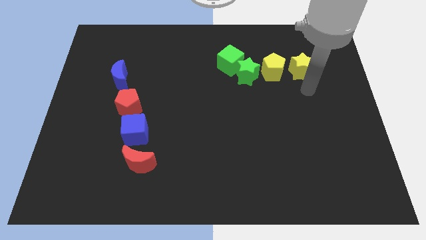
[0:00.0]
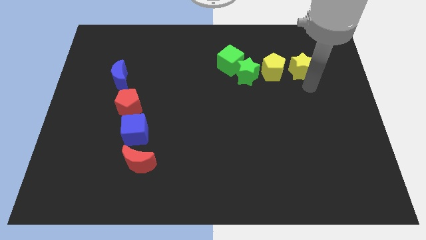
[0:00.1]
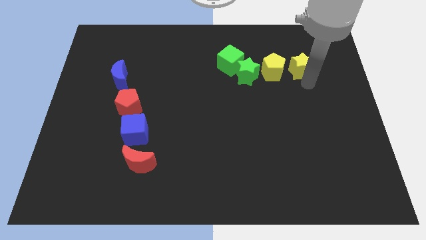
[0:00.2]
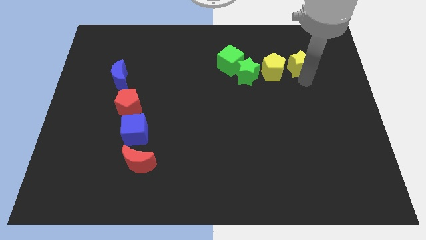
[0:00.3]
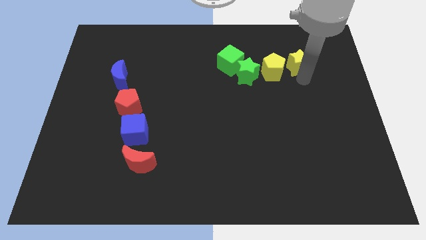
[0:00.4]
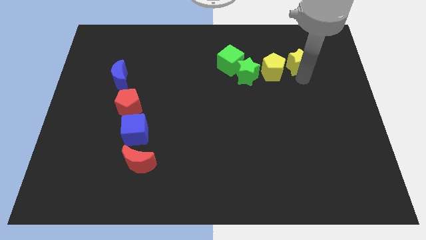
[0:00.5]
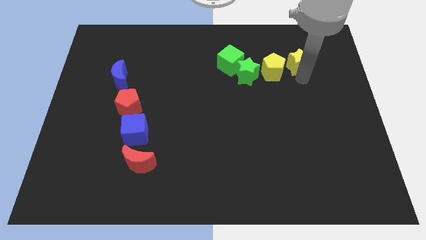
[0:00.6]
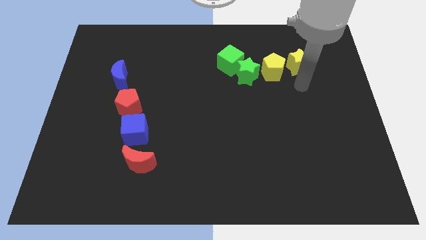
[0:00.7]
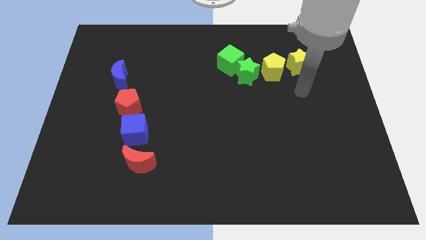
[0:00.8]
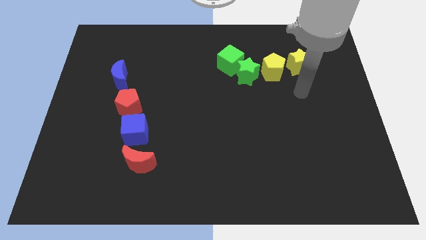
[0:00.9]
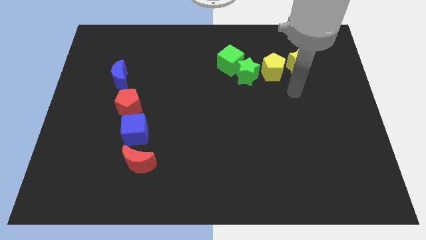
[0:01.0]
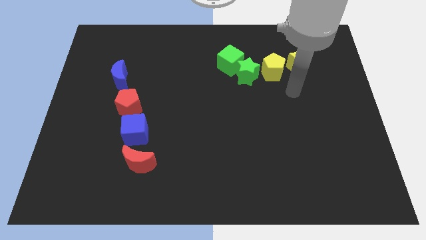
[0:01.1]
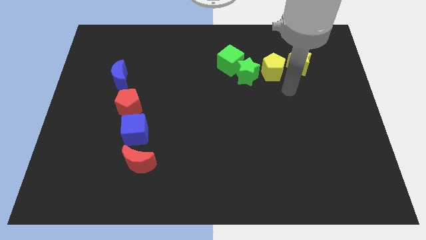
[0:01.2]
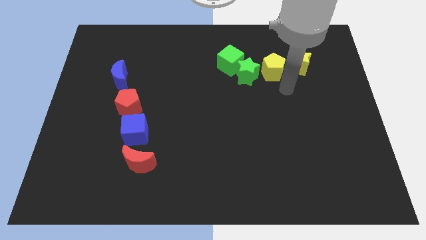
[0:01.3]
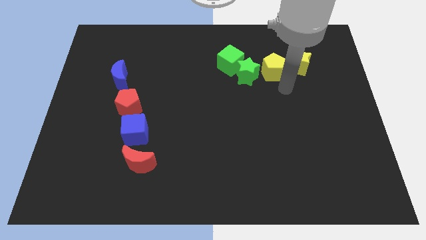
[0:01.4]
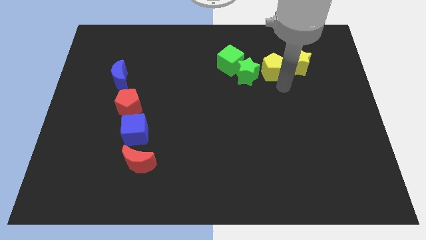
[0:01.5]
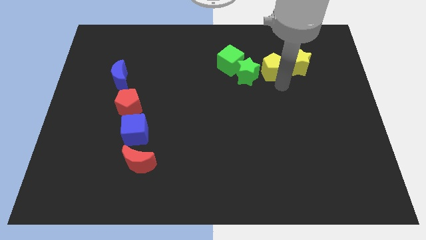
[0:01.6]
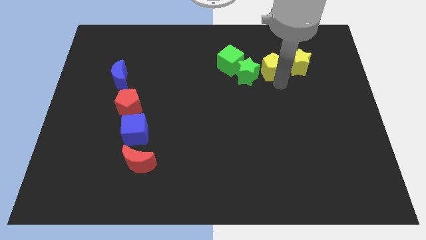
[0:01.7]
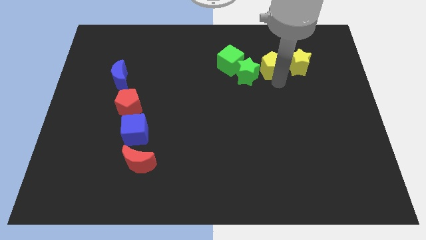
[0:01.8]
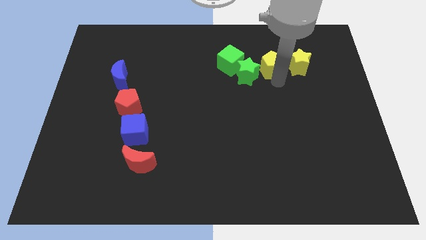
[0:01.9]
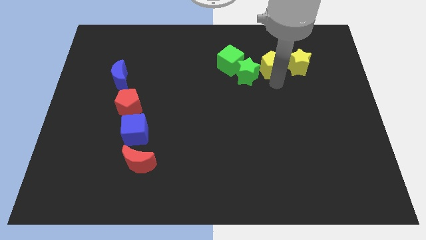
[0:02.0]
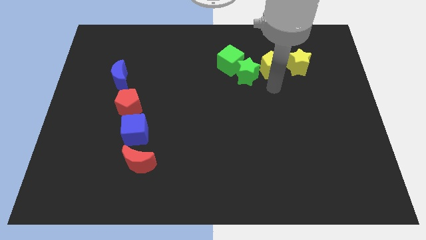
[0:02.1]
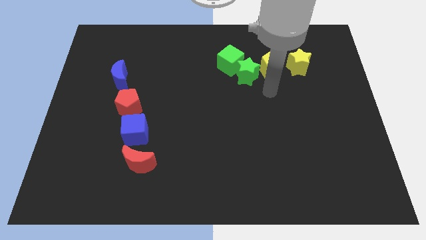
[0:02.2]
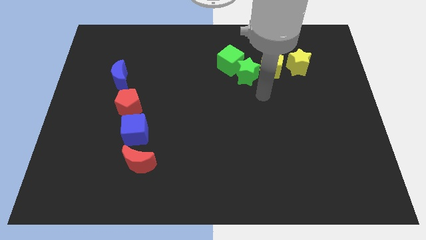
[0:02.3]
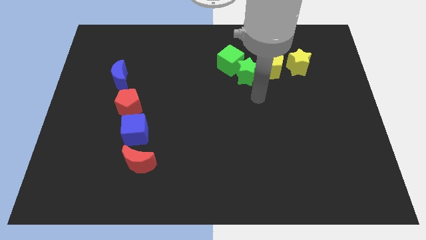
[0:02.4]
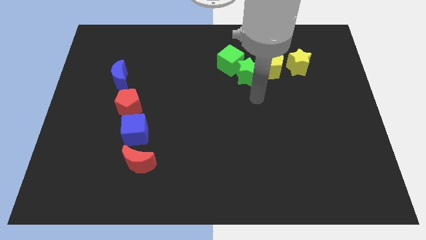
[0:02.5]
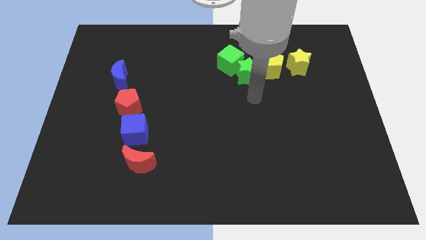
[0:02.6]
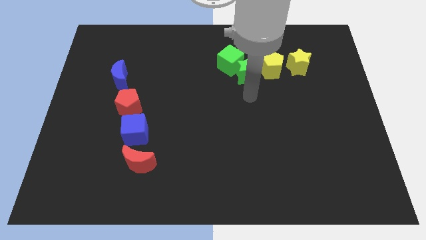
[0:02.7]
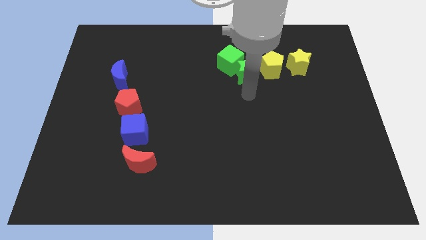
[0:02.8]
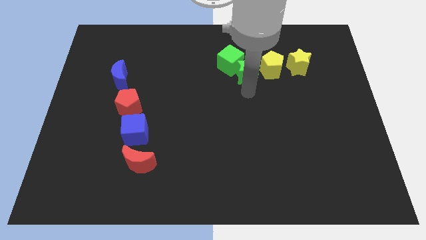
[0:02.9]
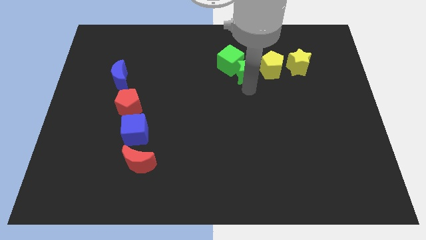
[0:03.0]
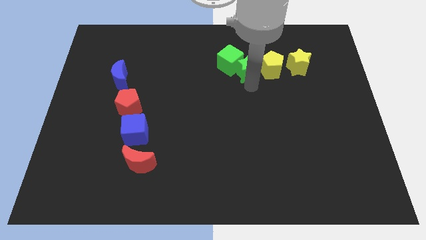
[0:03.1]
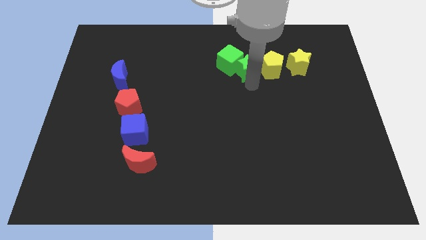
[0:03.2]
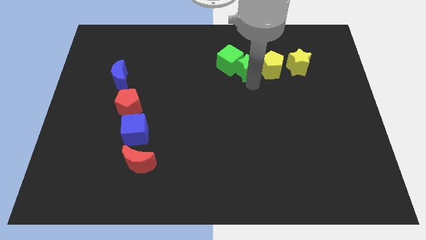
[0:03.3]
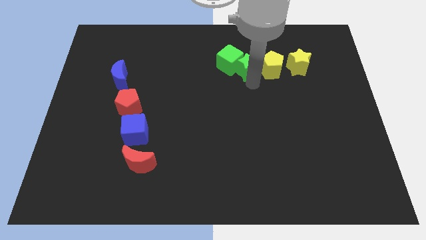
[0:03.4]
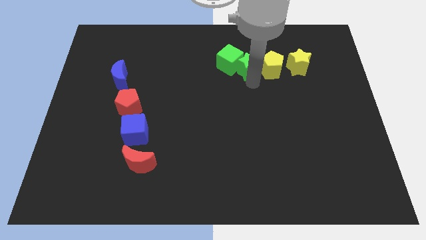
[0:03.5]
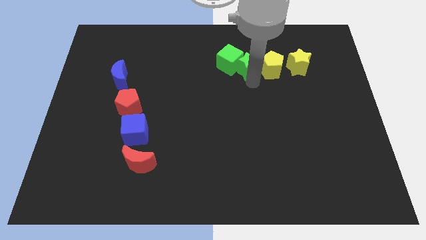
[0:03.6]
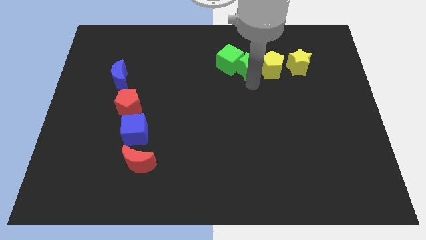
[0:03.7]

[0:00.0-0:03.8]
adjust the green star and yellow pentagon in a horizontal line

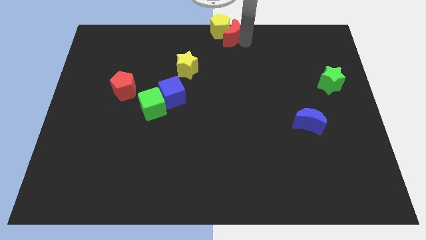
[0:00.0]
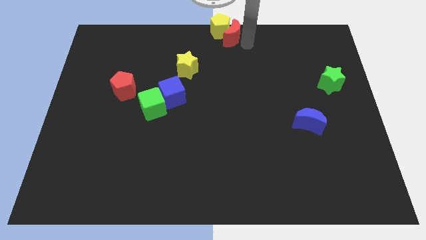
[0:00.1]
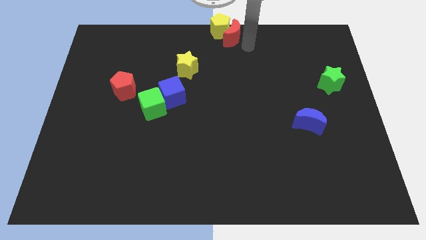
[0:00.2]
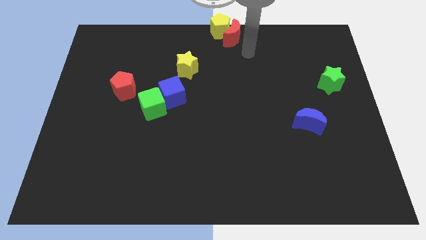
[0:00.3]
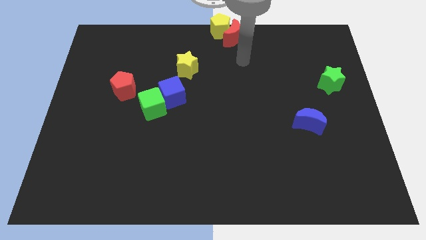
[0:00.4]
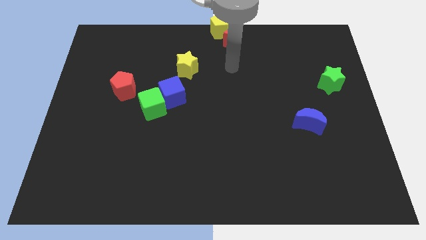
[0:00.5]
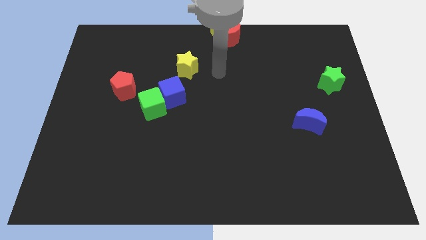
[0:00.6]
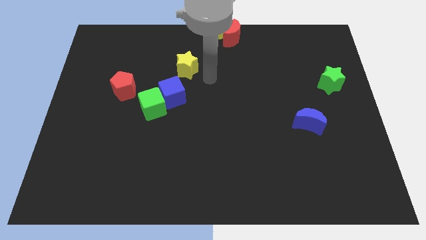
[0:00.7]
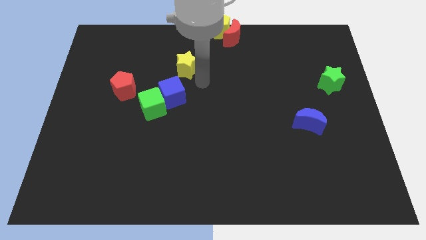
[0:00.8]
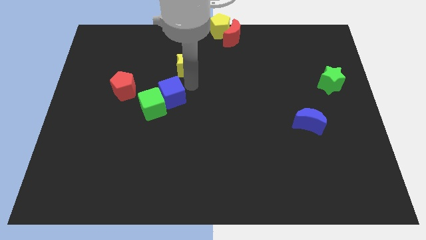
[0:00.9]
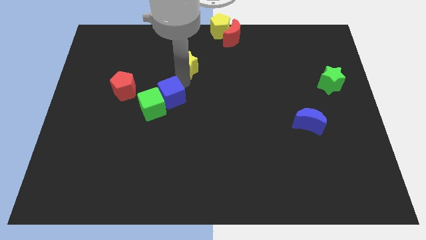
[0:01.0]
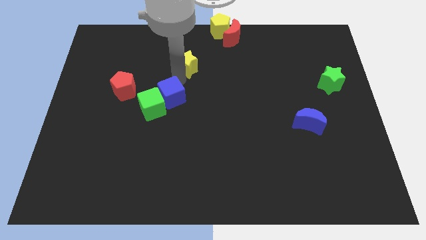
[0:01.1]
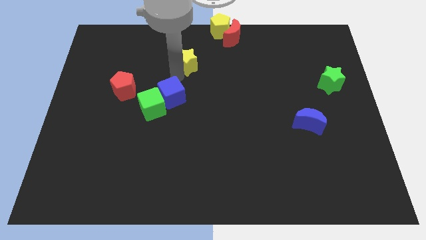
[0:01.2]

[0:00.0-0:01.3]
move your arm to the bottom of yellow star

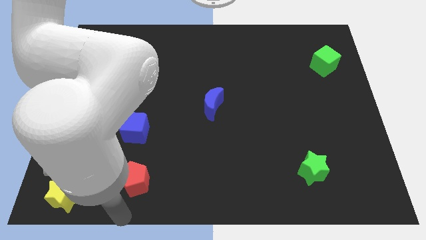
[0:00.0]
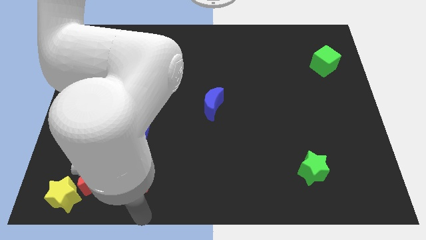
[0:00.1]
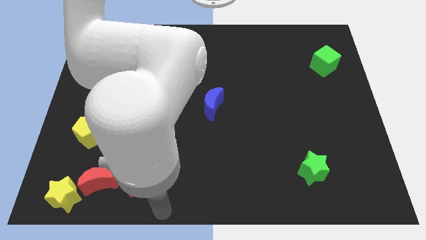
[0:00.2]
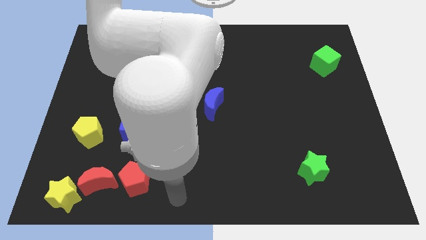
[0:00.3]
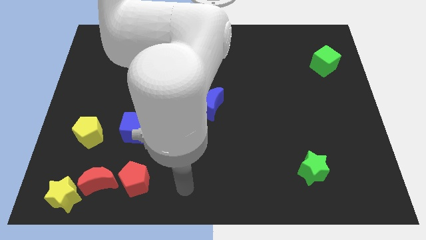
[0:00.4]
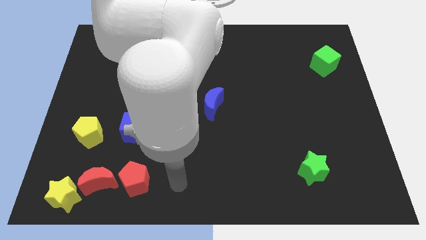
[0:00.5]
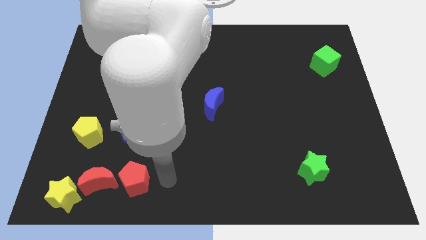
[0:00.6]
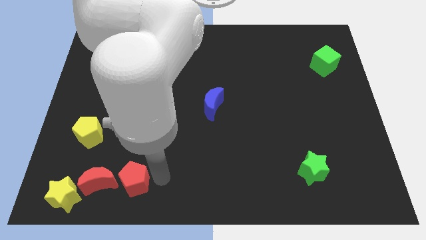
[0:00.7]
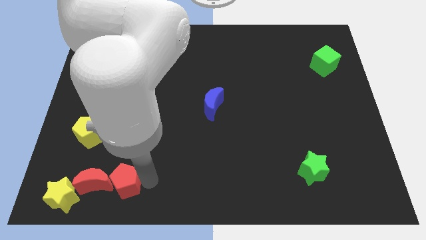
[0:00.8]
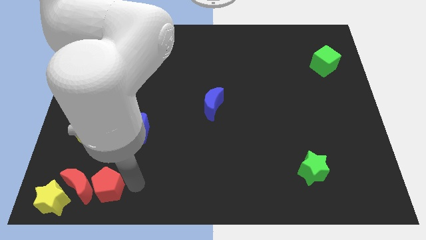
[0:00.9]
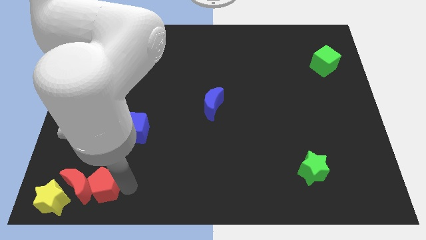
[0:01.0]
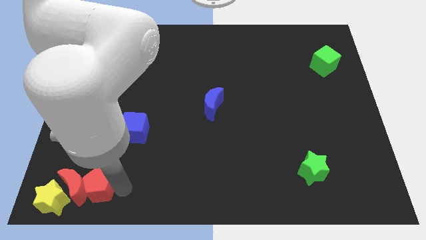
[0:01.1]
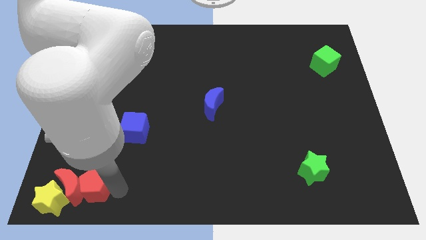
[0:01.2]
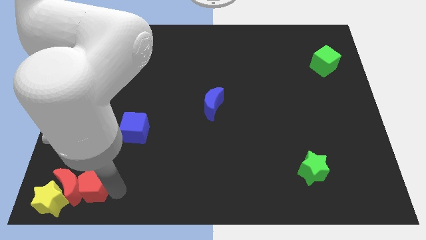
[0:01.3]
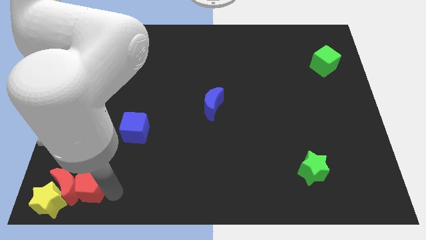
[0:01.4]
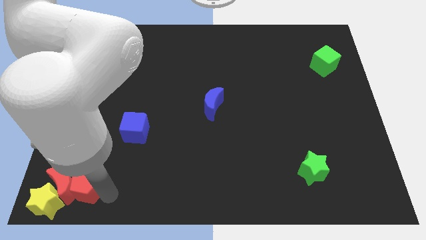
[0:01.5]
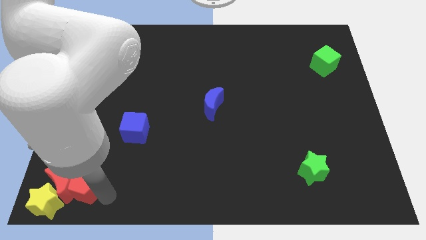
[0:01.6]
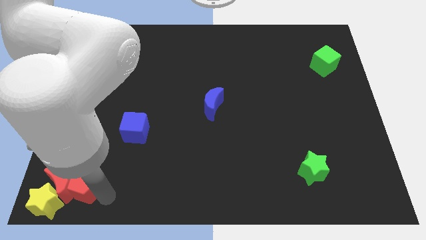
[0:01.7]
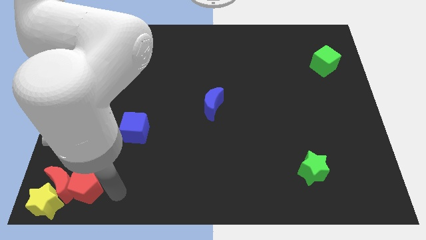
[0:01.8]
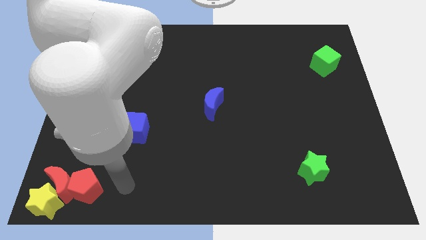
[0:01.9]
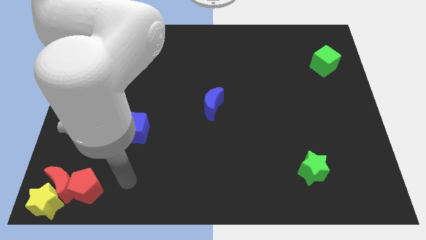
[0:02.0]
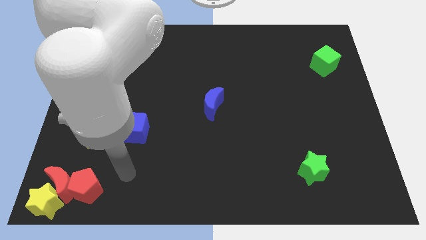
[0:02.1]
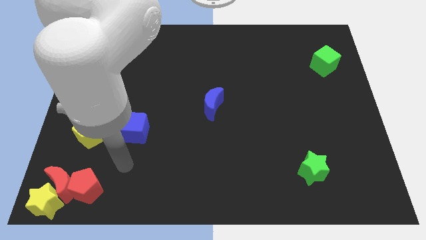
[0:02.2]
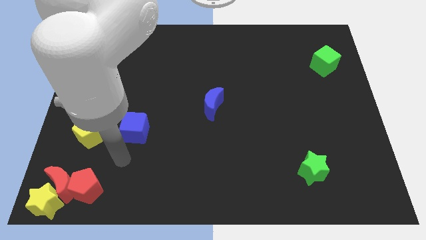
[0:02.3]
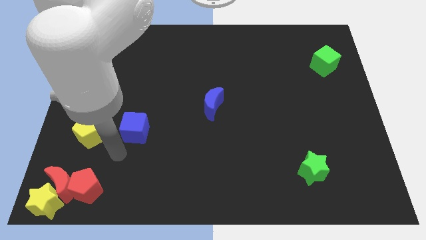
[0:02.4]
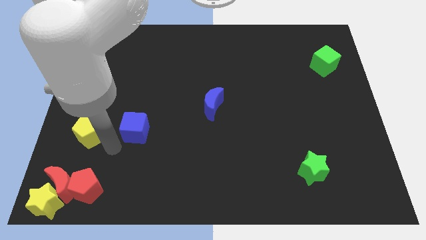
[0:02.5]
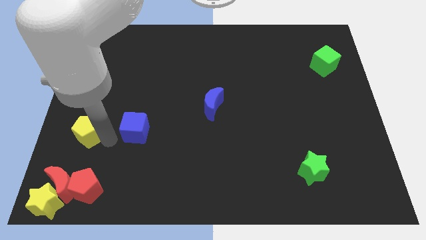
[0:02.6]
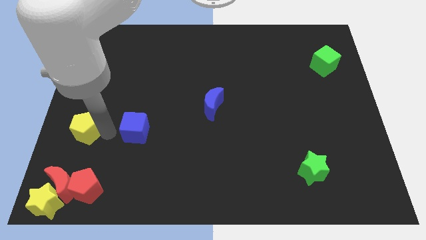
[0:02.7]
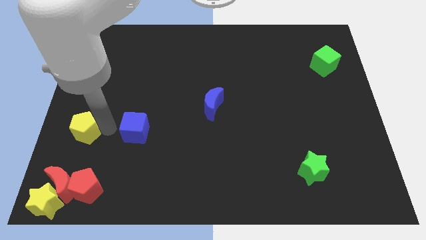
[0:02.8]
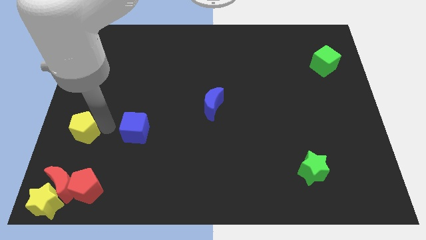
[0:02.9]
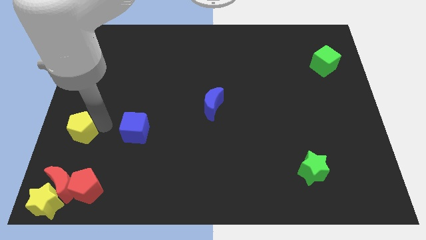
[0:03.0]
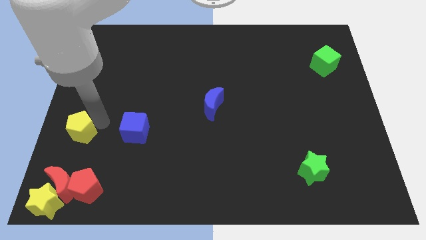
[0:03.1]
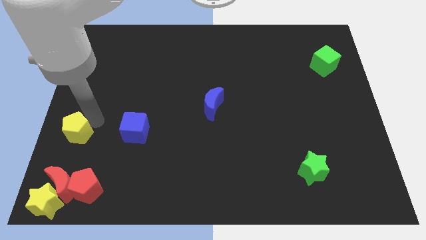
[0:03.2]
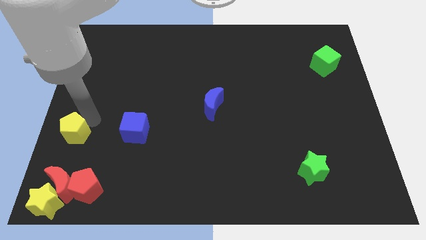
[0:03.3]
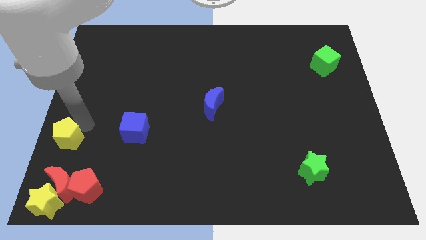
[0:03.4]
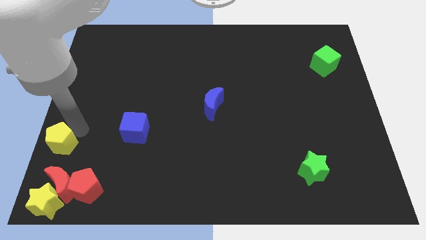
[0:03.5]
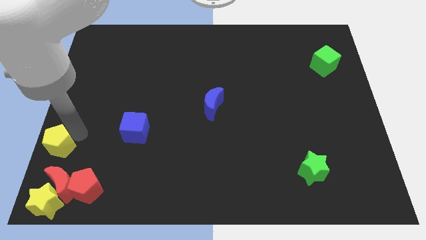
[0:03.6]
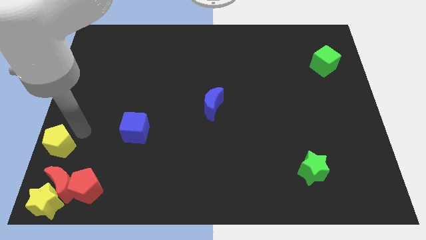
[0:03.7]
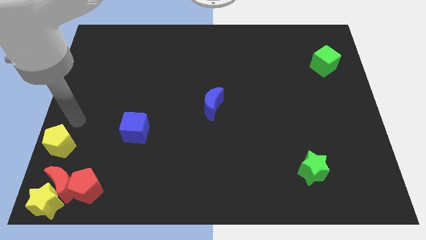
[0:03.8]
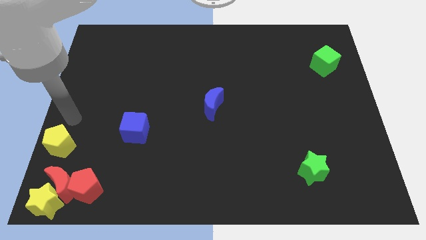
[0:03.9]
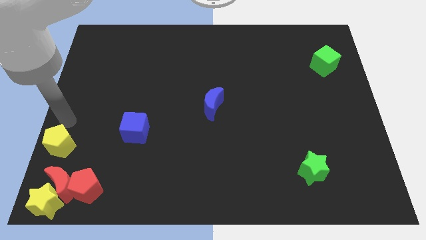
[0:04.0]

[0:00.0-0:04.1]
move yellow pentagon to the left
